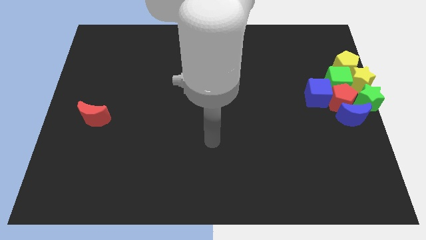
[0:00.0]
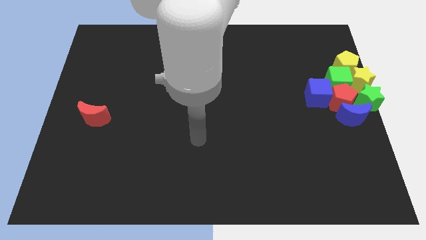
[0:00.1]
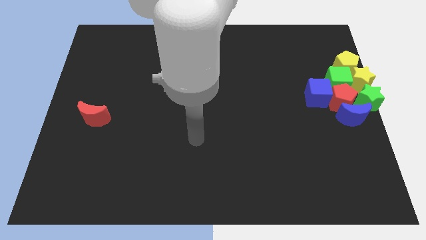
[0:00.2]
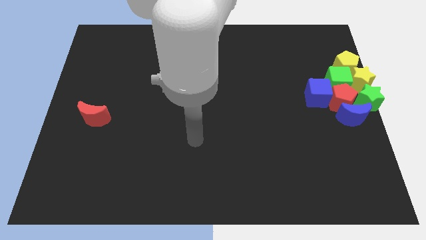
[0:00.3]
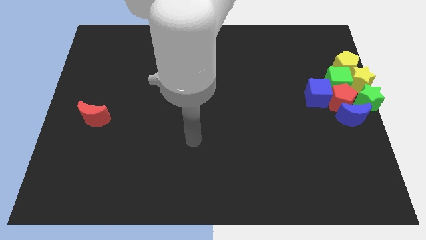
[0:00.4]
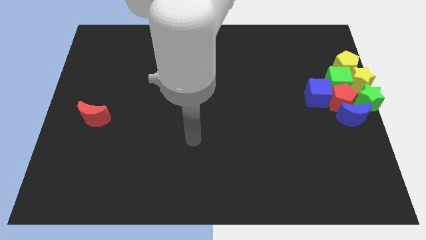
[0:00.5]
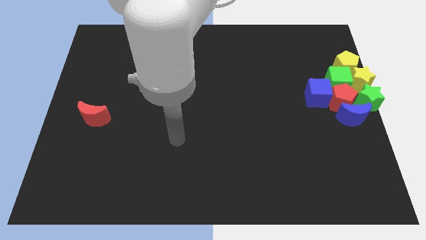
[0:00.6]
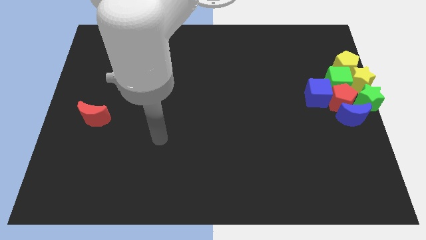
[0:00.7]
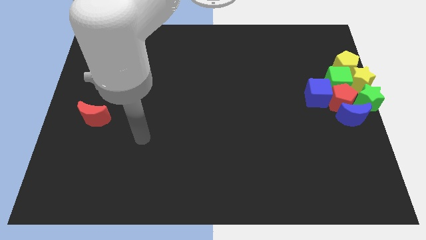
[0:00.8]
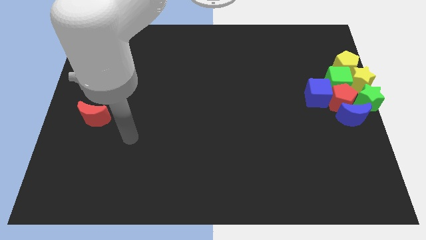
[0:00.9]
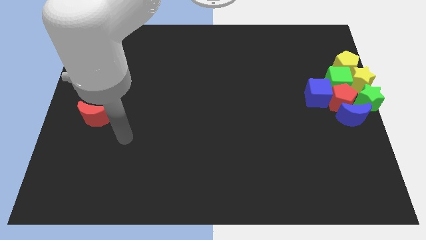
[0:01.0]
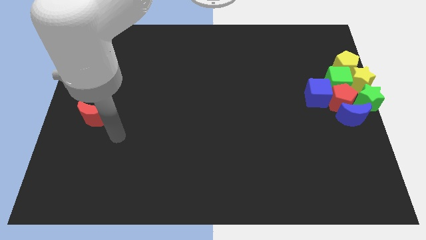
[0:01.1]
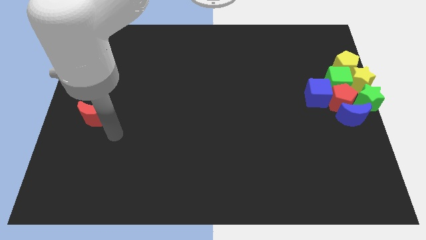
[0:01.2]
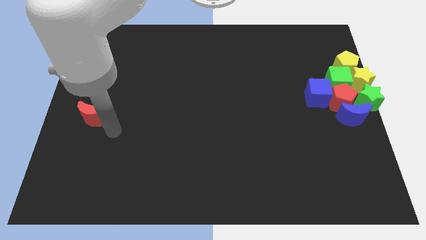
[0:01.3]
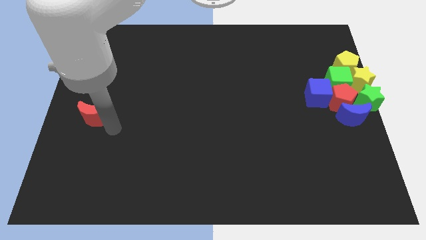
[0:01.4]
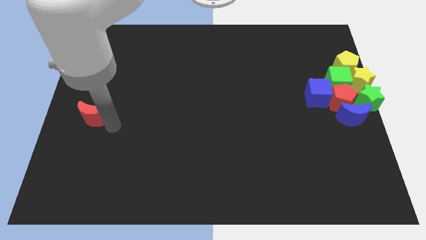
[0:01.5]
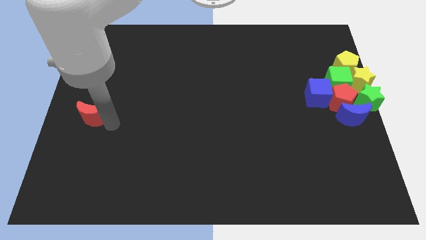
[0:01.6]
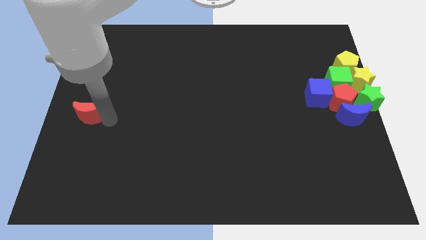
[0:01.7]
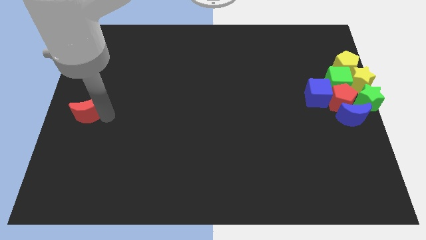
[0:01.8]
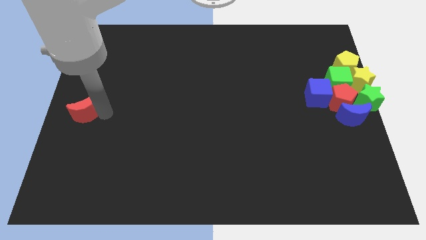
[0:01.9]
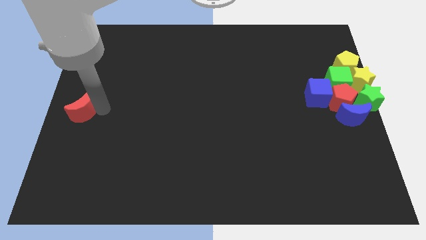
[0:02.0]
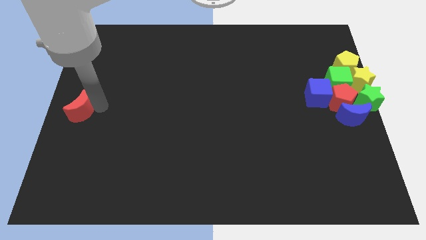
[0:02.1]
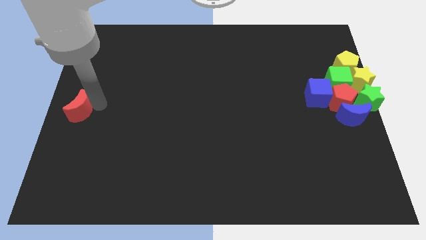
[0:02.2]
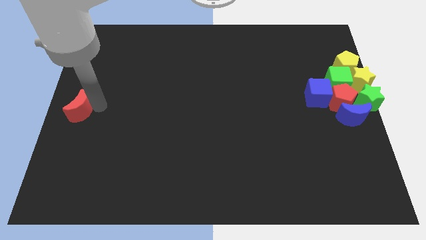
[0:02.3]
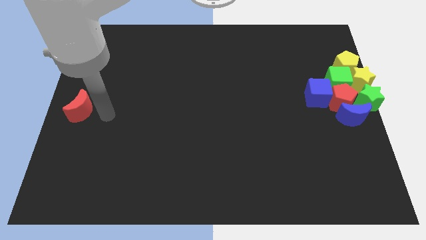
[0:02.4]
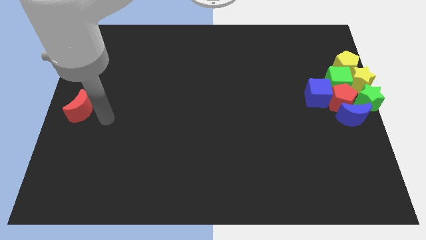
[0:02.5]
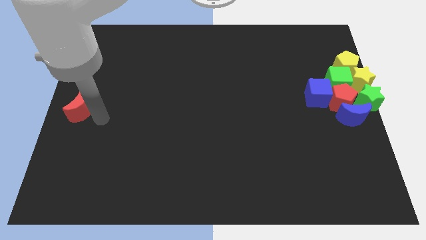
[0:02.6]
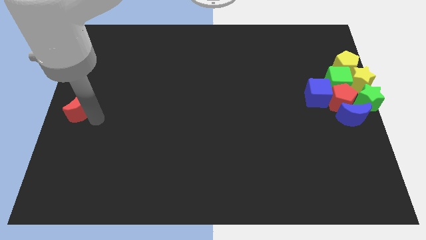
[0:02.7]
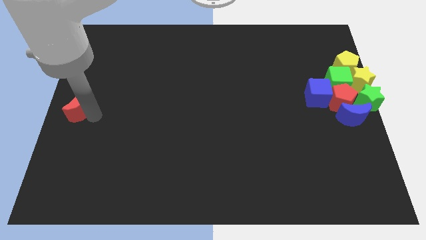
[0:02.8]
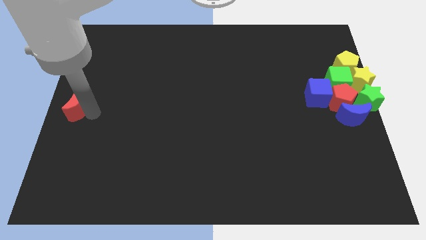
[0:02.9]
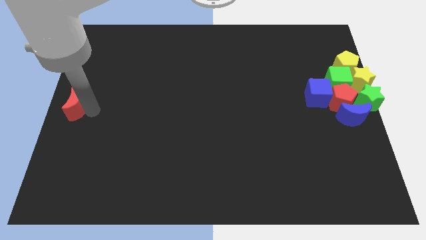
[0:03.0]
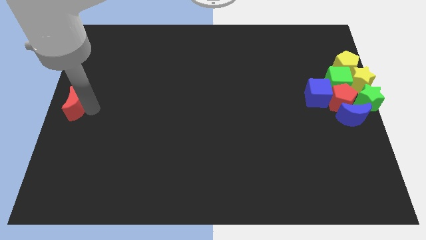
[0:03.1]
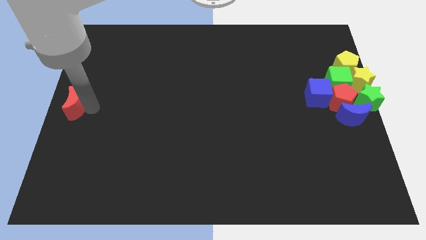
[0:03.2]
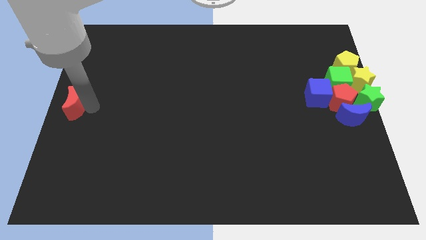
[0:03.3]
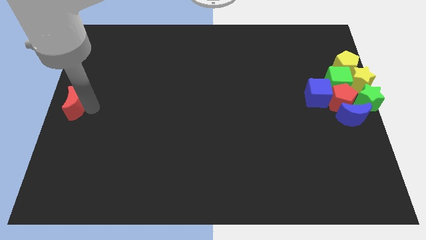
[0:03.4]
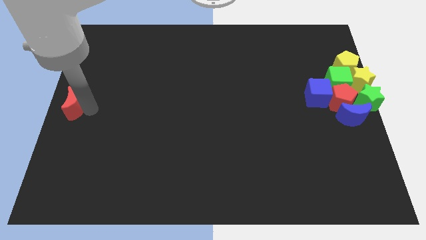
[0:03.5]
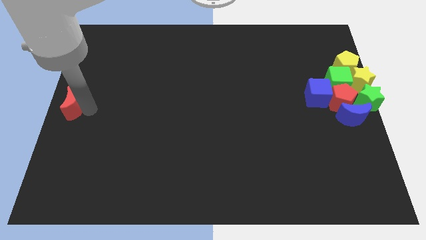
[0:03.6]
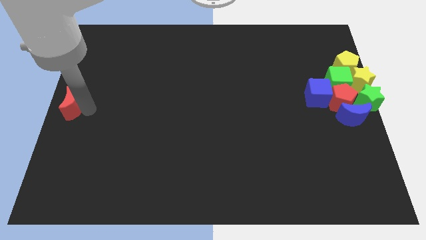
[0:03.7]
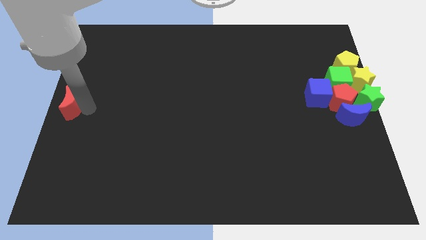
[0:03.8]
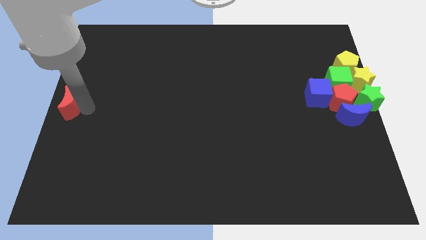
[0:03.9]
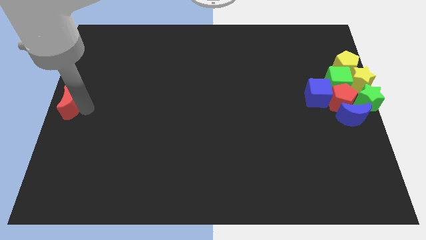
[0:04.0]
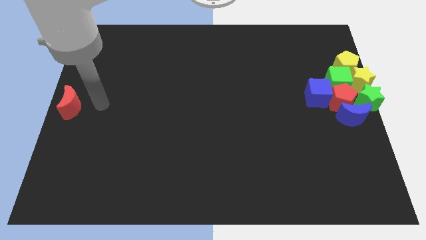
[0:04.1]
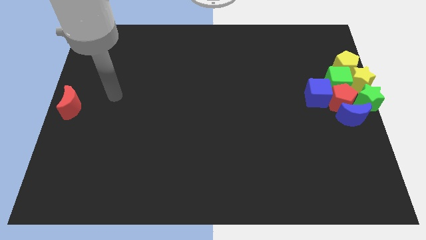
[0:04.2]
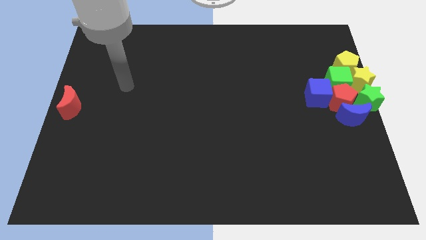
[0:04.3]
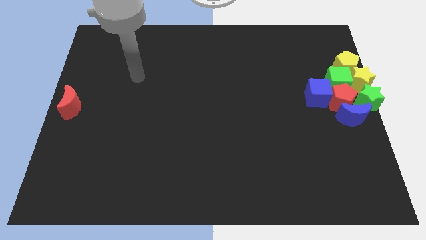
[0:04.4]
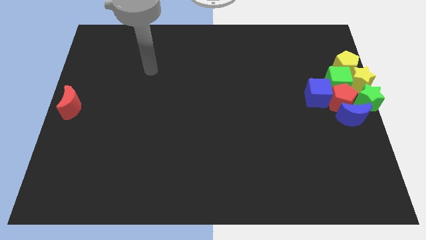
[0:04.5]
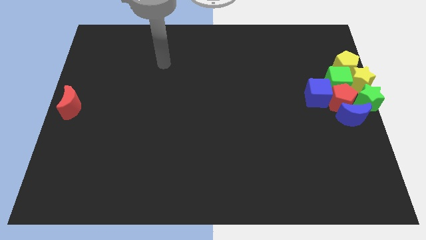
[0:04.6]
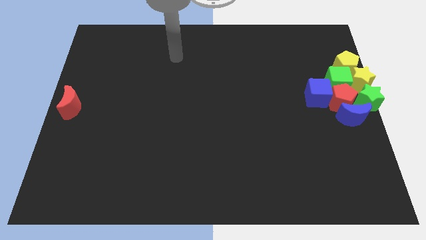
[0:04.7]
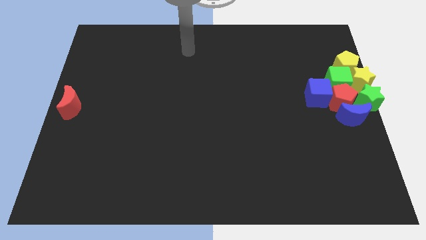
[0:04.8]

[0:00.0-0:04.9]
move the red moon to the left center of the board

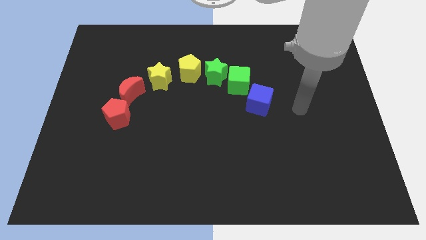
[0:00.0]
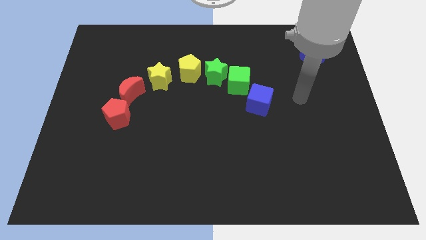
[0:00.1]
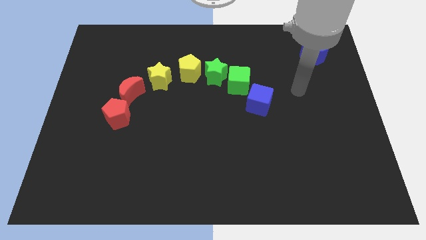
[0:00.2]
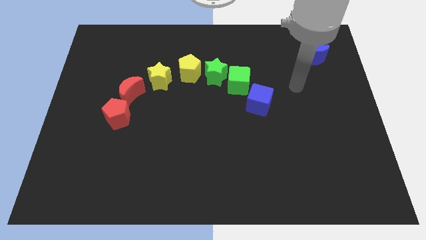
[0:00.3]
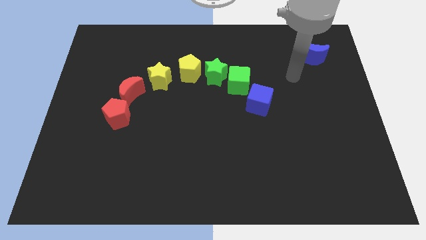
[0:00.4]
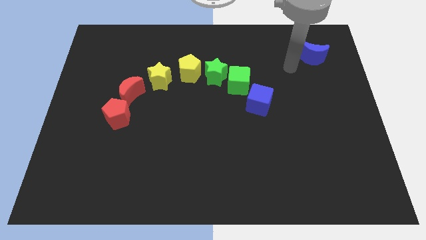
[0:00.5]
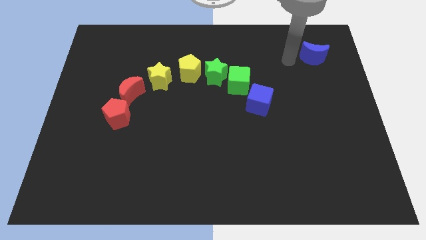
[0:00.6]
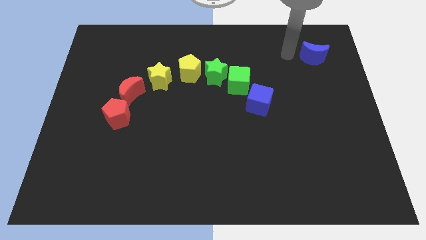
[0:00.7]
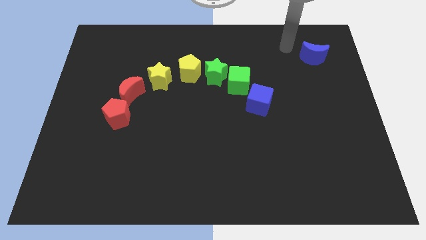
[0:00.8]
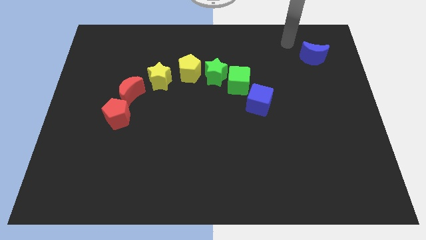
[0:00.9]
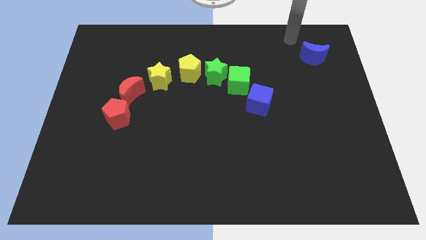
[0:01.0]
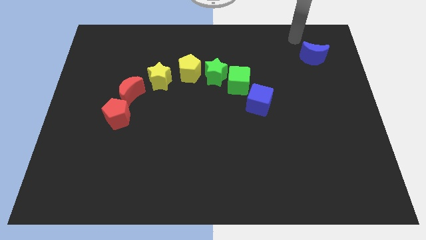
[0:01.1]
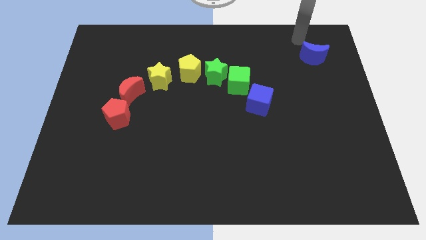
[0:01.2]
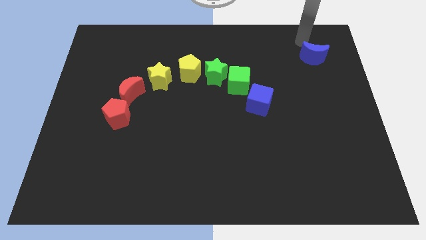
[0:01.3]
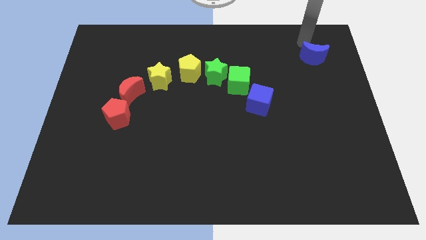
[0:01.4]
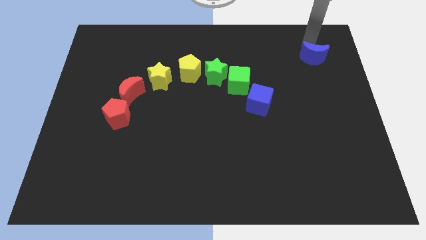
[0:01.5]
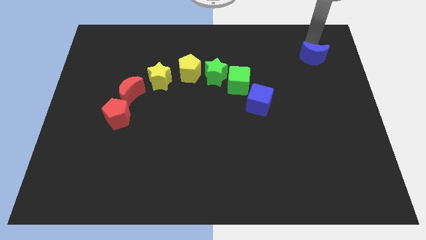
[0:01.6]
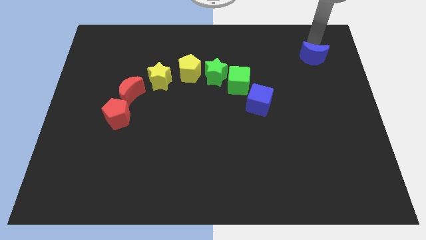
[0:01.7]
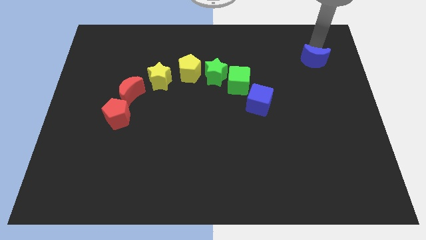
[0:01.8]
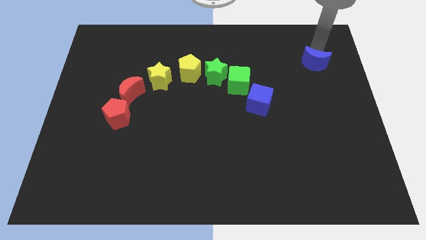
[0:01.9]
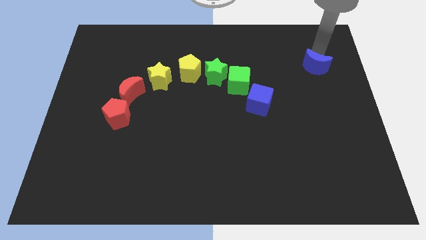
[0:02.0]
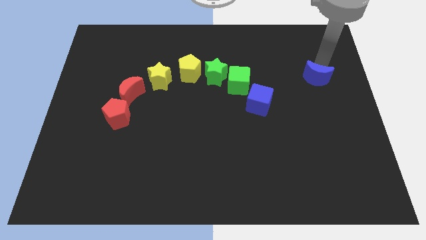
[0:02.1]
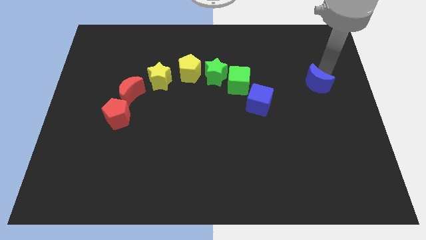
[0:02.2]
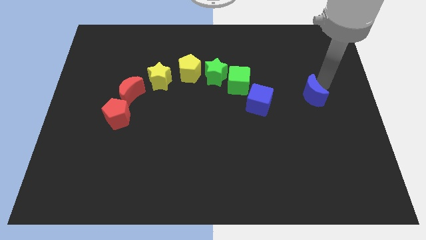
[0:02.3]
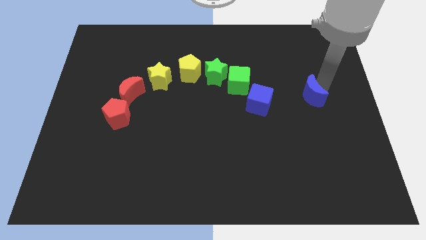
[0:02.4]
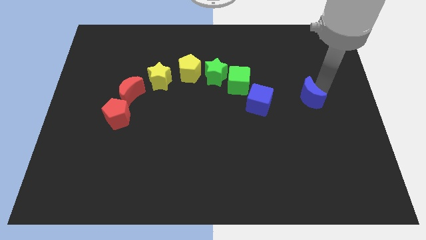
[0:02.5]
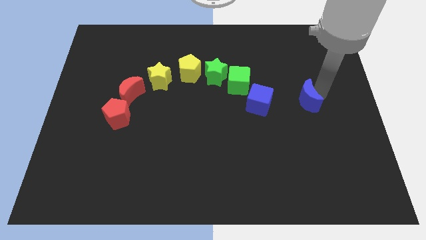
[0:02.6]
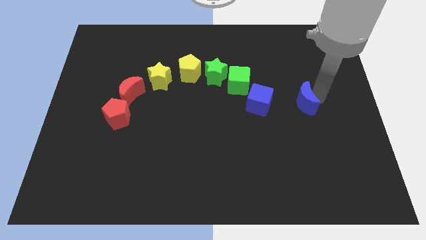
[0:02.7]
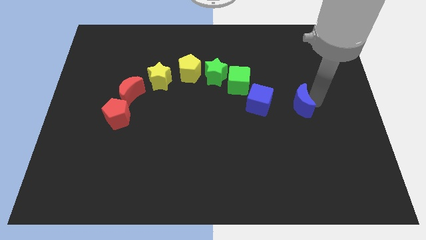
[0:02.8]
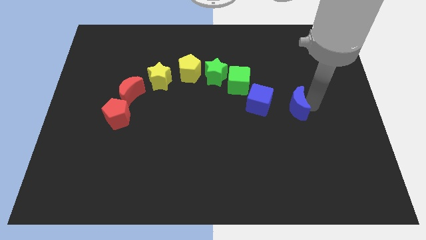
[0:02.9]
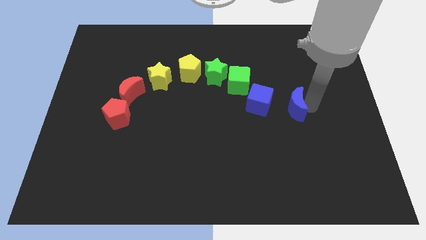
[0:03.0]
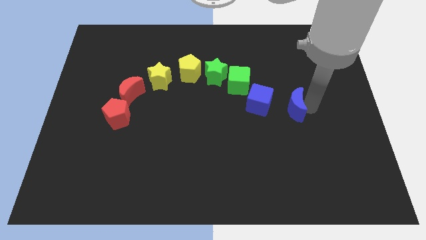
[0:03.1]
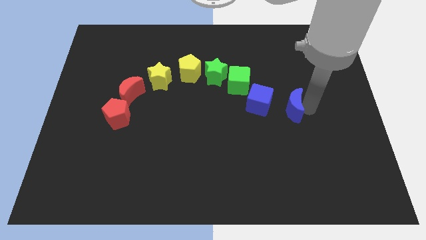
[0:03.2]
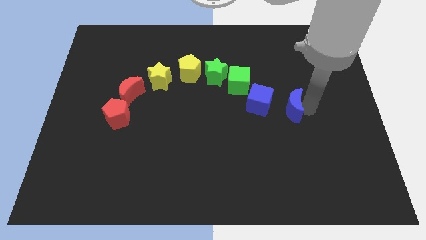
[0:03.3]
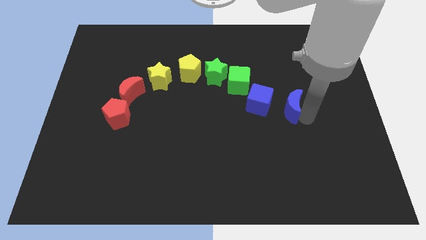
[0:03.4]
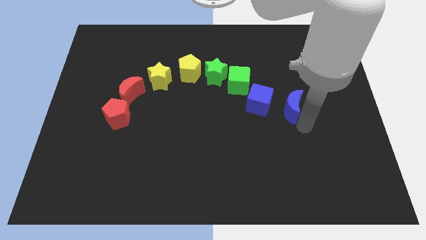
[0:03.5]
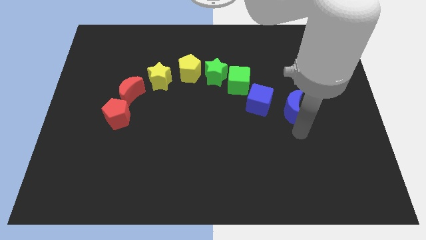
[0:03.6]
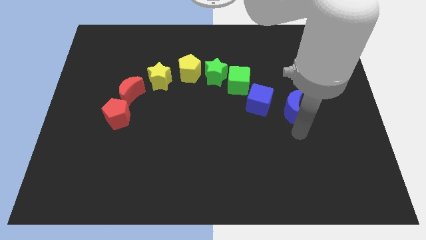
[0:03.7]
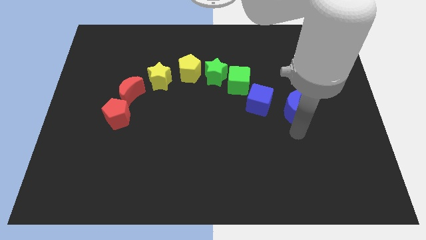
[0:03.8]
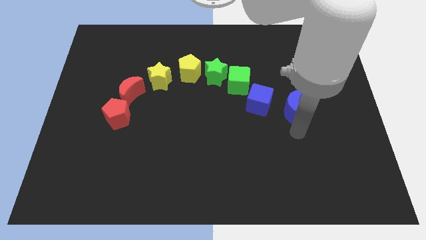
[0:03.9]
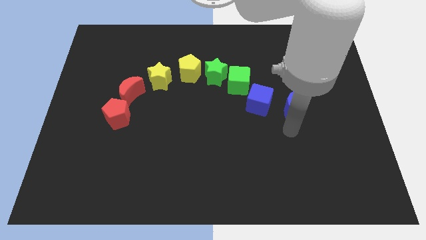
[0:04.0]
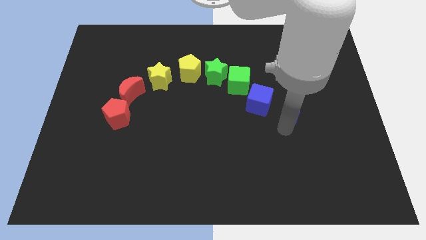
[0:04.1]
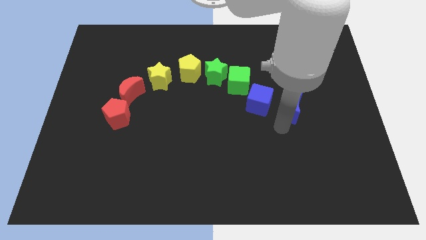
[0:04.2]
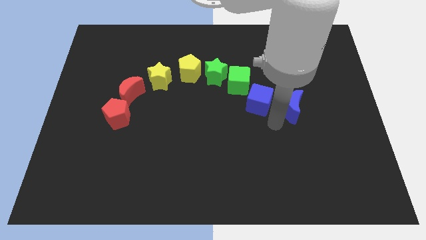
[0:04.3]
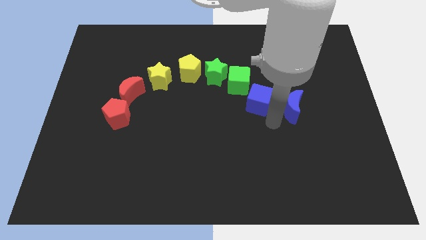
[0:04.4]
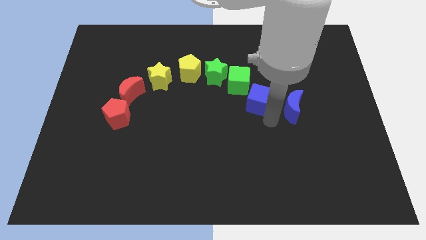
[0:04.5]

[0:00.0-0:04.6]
slide the blue crescent to the right side of the blue cube
